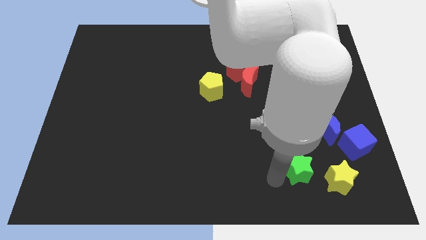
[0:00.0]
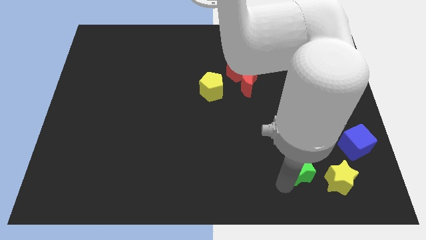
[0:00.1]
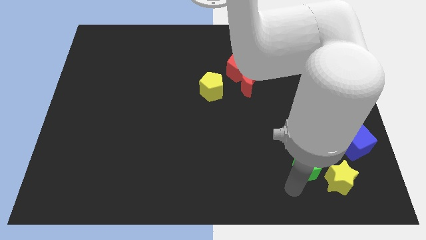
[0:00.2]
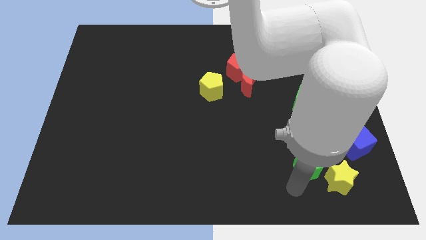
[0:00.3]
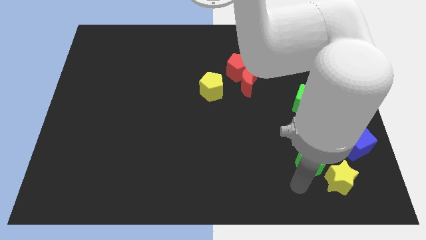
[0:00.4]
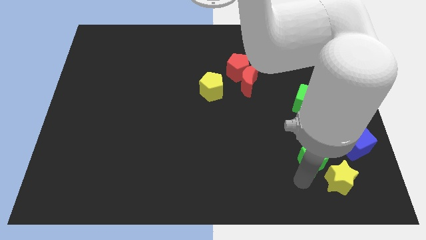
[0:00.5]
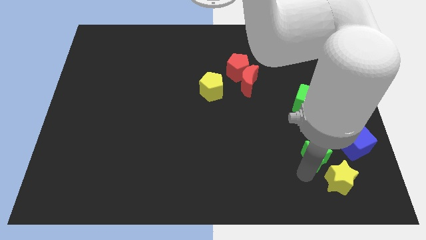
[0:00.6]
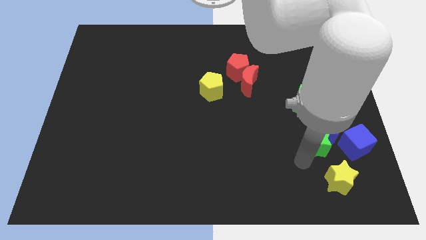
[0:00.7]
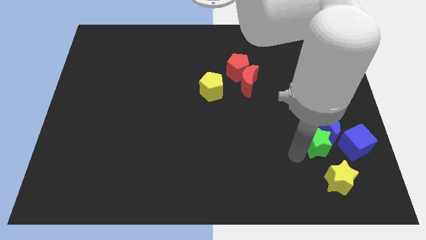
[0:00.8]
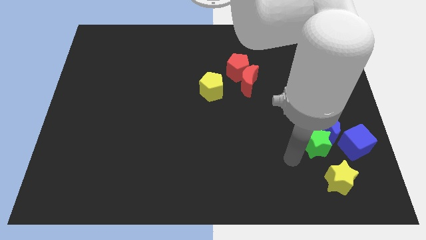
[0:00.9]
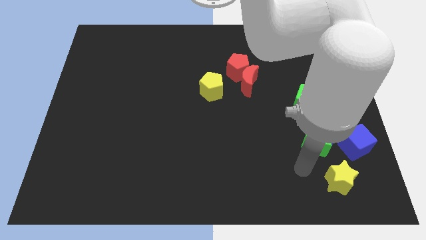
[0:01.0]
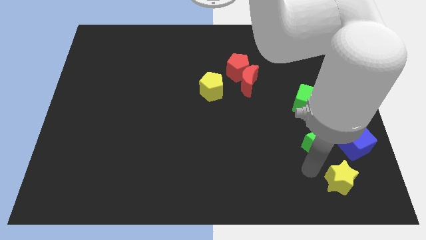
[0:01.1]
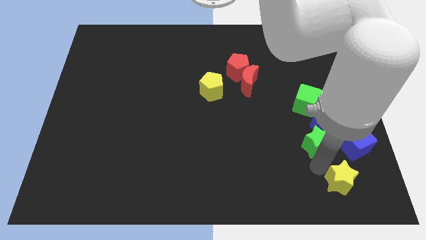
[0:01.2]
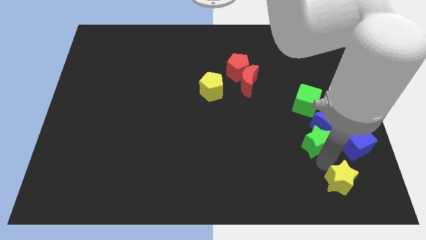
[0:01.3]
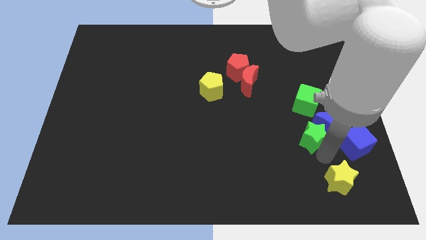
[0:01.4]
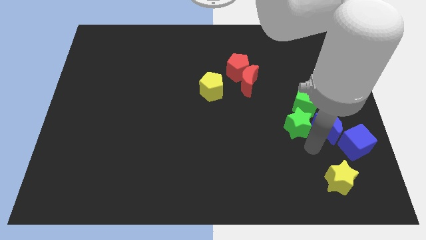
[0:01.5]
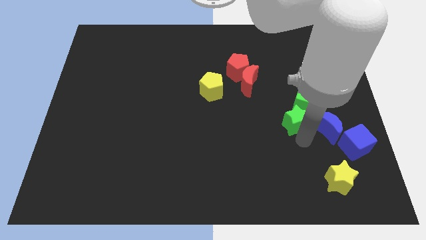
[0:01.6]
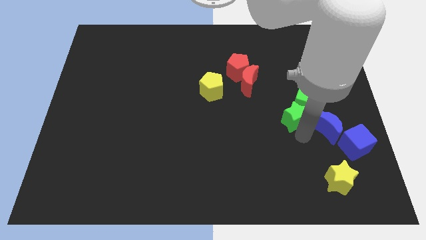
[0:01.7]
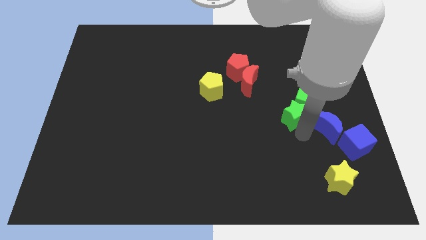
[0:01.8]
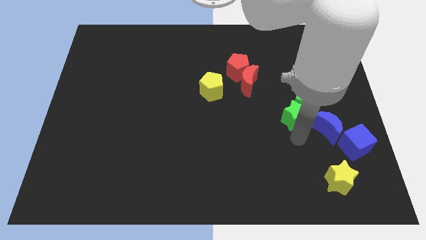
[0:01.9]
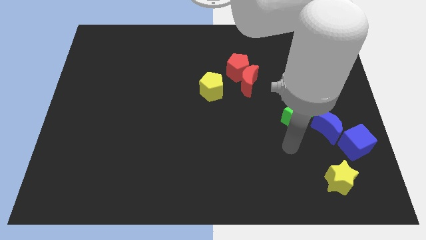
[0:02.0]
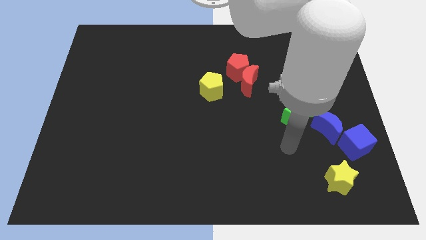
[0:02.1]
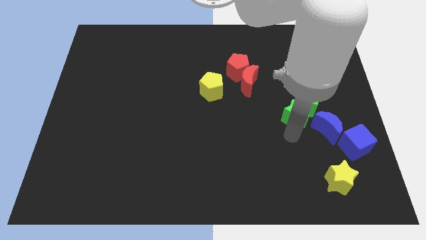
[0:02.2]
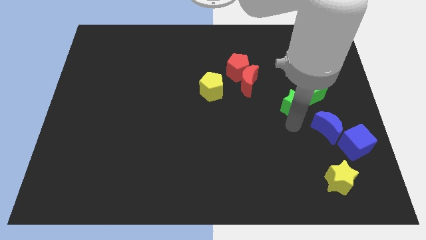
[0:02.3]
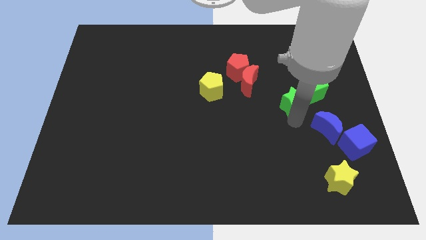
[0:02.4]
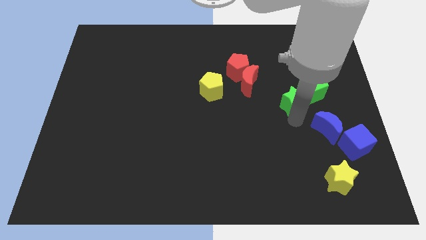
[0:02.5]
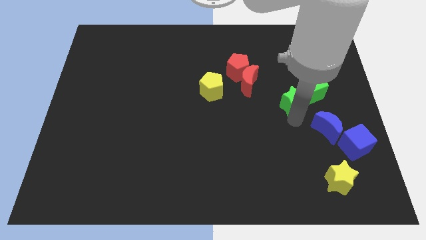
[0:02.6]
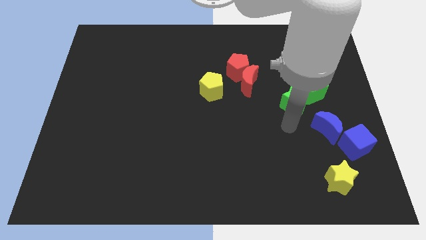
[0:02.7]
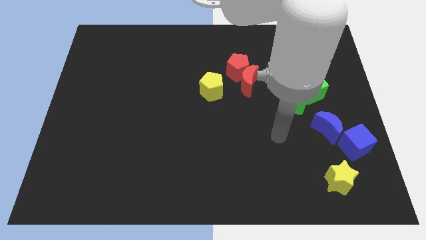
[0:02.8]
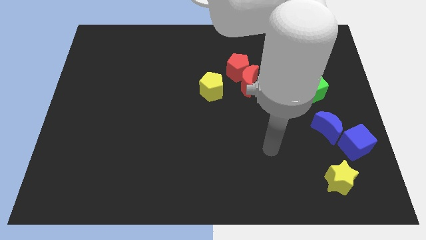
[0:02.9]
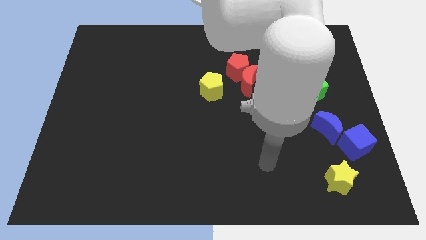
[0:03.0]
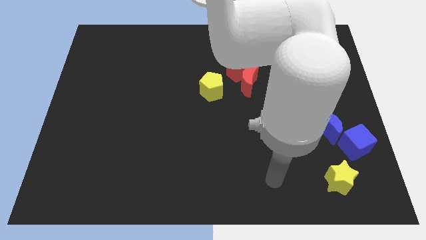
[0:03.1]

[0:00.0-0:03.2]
push green star into green cube

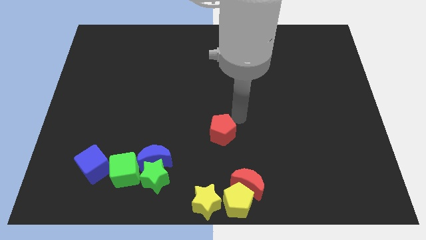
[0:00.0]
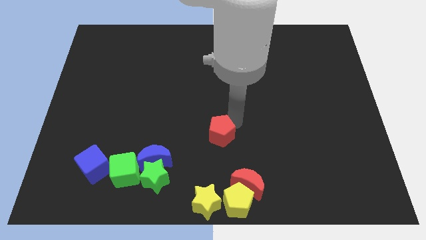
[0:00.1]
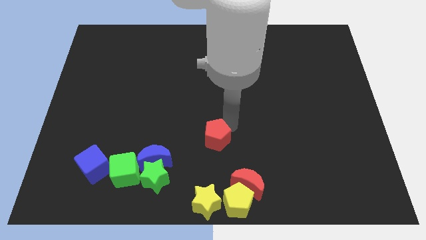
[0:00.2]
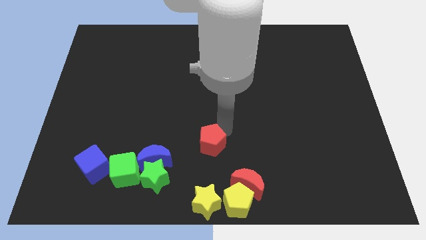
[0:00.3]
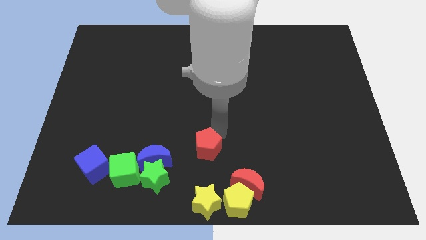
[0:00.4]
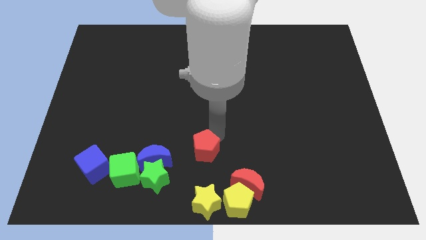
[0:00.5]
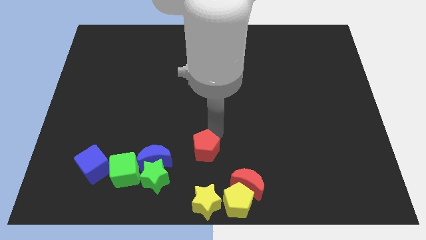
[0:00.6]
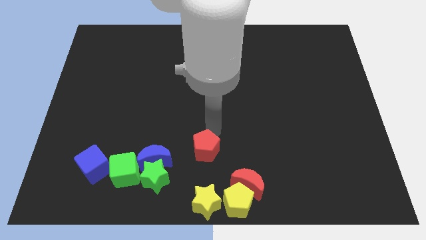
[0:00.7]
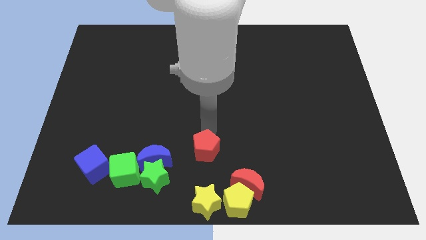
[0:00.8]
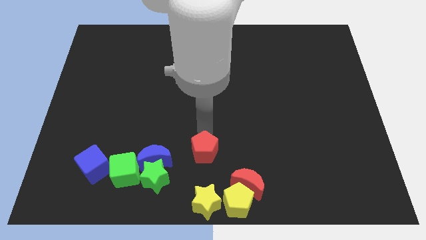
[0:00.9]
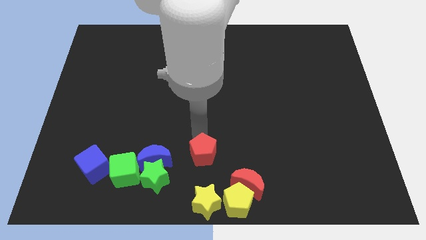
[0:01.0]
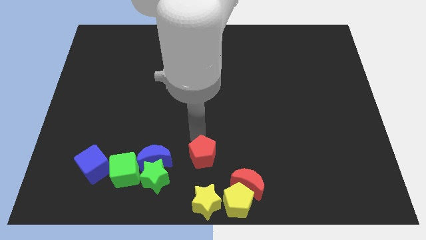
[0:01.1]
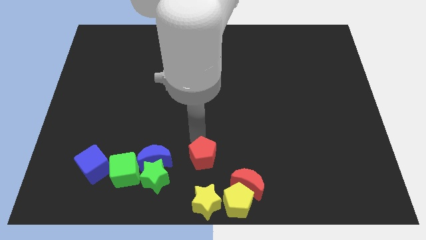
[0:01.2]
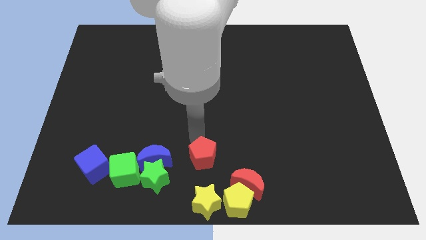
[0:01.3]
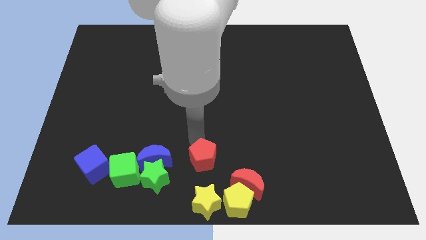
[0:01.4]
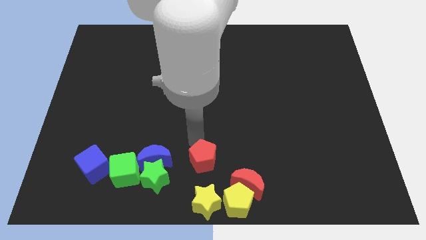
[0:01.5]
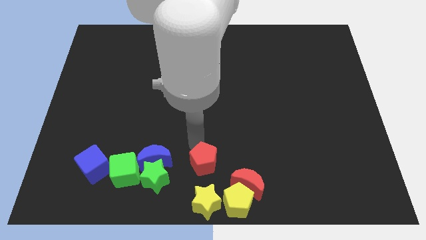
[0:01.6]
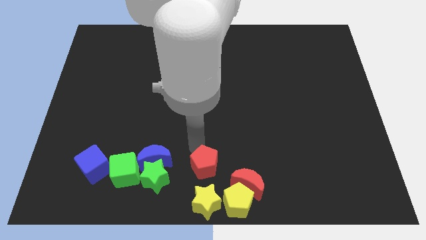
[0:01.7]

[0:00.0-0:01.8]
push the red pentagon at the right side of the blue crescent

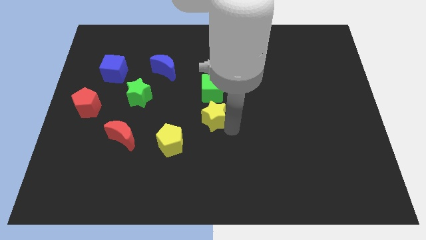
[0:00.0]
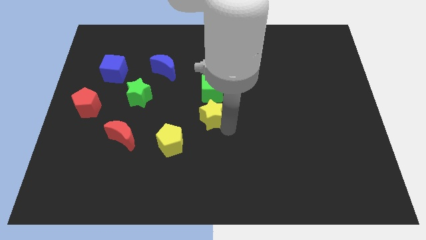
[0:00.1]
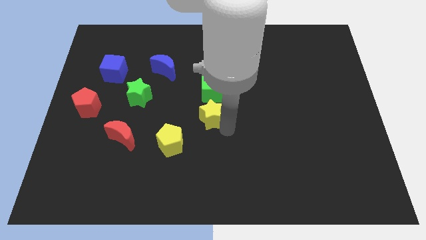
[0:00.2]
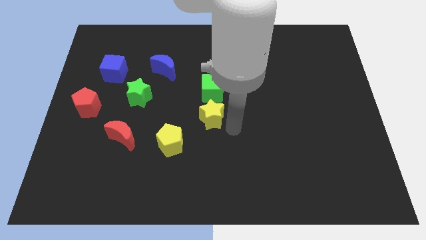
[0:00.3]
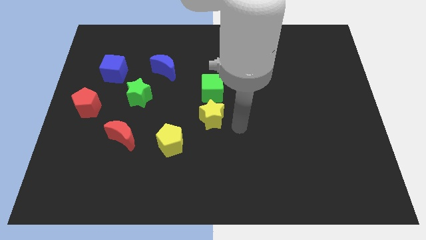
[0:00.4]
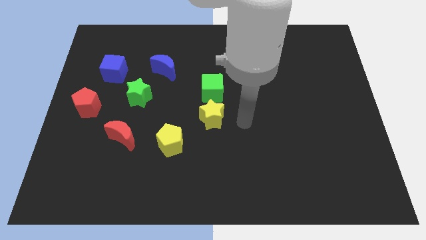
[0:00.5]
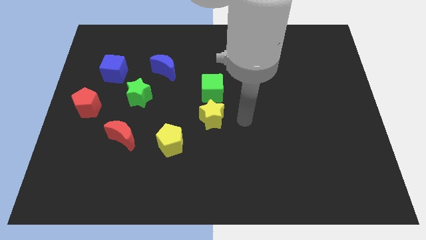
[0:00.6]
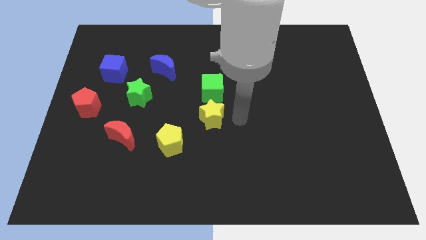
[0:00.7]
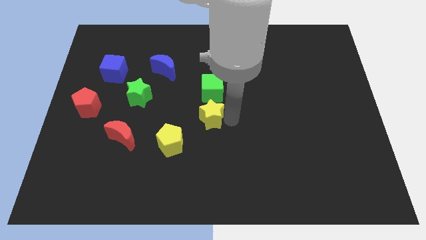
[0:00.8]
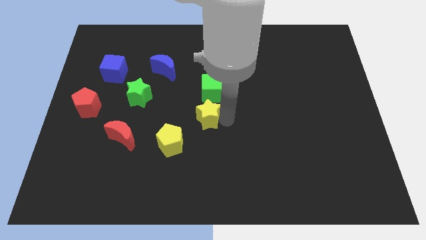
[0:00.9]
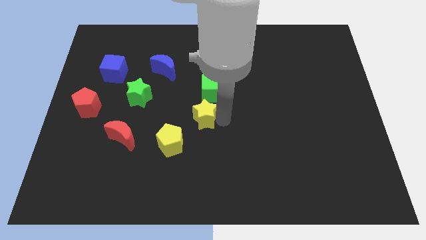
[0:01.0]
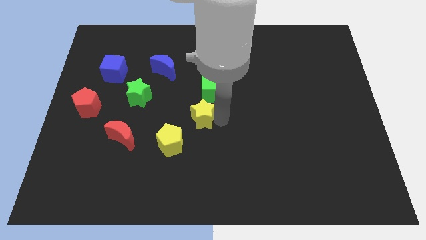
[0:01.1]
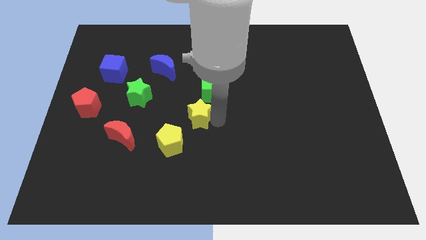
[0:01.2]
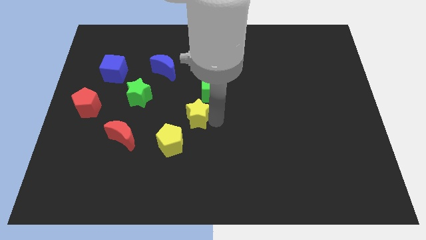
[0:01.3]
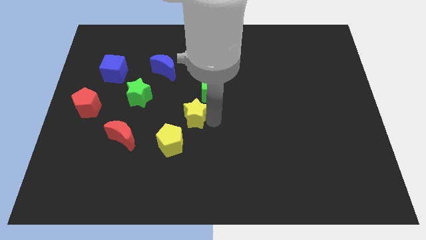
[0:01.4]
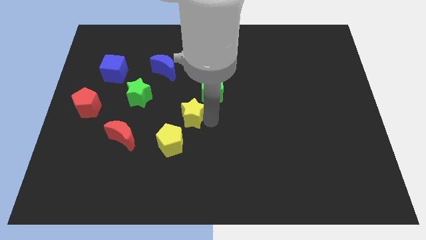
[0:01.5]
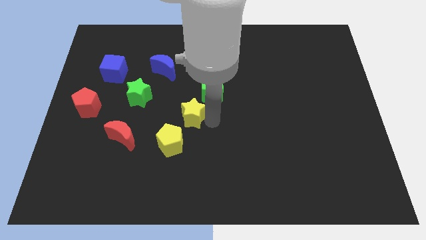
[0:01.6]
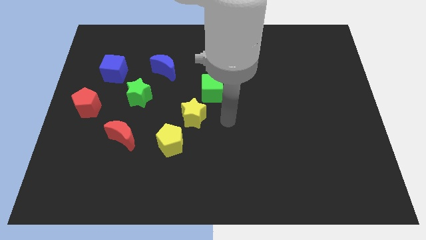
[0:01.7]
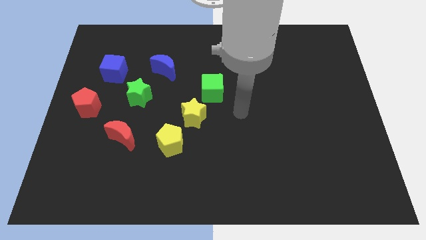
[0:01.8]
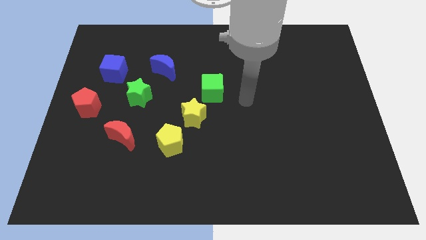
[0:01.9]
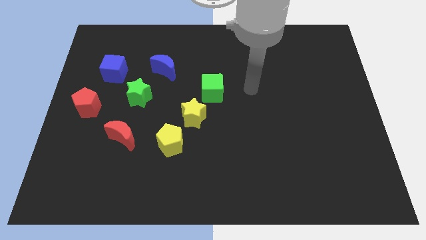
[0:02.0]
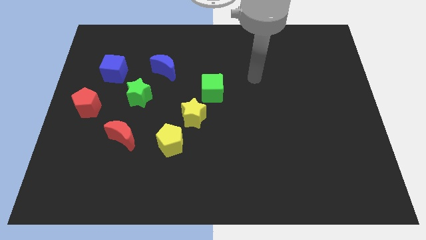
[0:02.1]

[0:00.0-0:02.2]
put the yellow star between the yellow pentagon and green cube

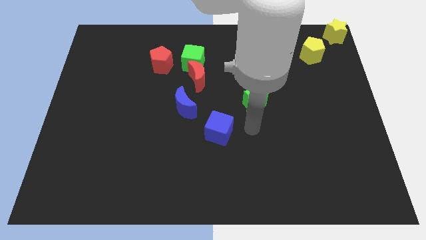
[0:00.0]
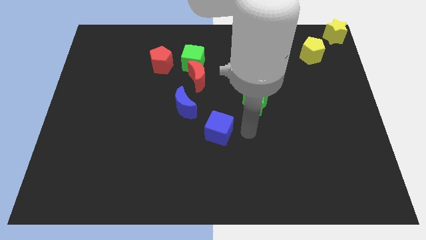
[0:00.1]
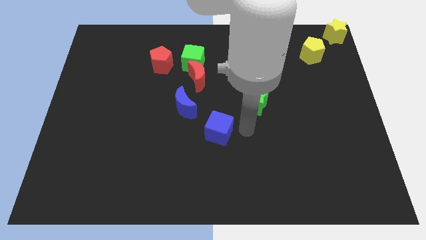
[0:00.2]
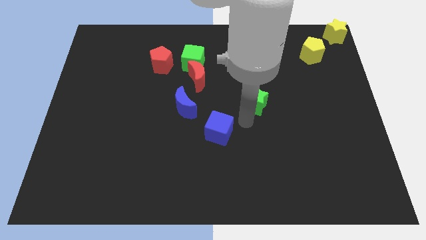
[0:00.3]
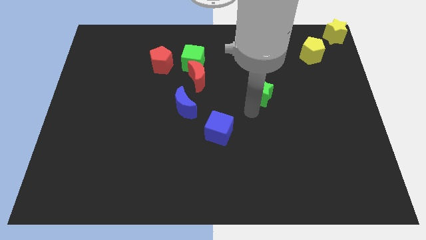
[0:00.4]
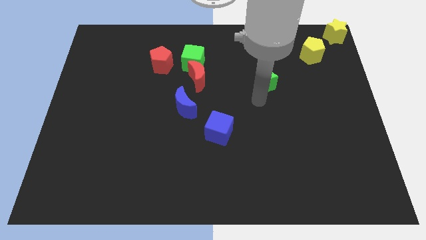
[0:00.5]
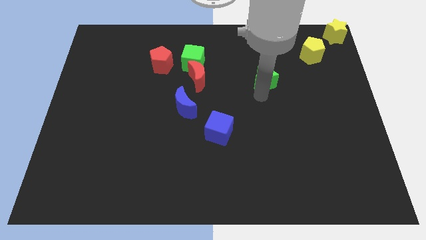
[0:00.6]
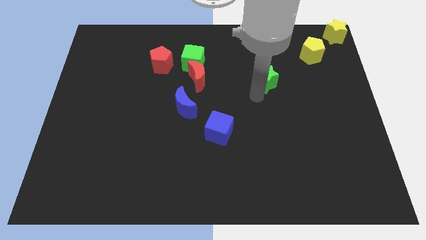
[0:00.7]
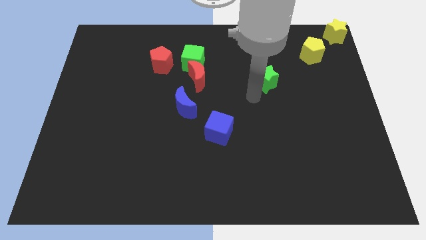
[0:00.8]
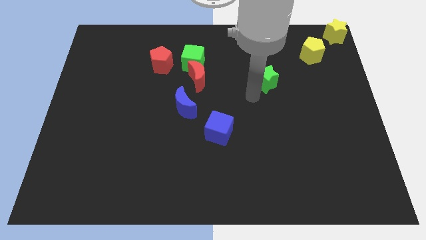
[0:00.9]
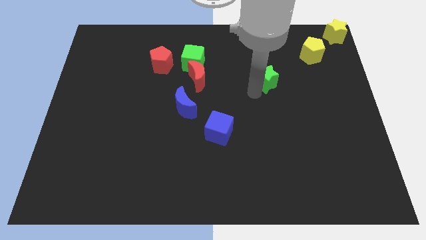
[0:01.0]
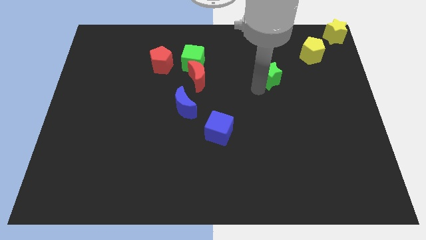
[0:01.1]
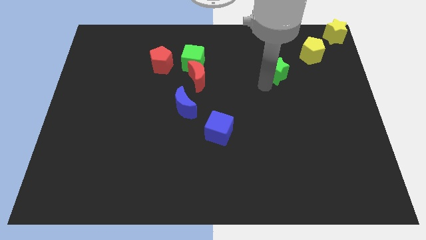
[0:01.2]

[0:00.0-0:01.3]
move the green star towards the yellow pentagon

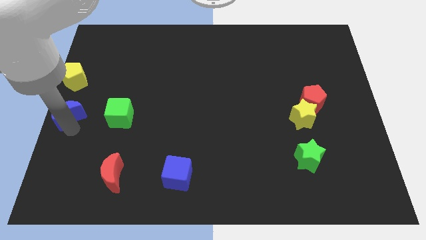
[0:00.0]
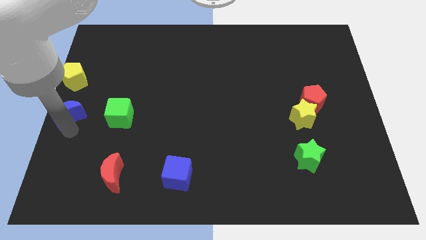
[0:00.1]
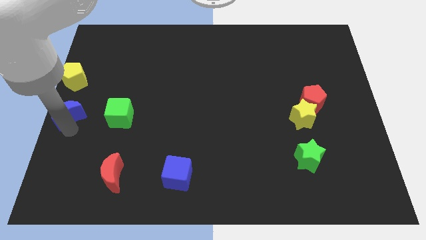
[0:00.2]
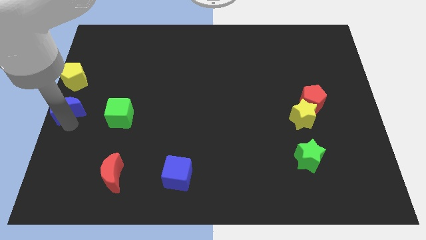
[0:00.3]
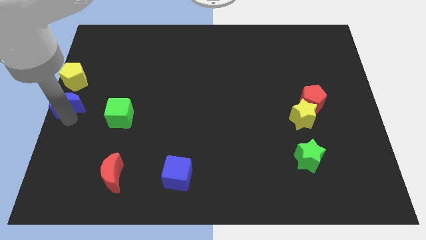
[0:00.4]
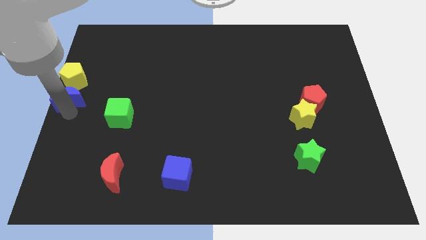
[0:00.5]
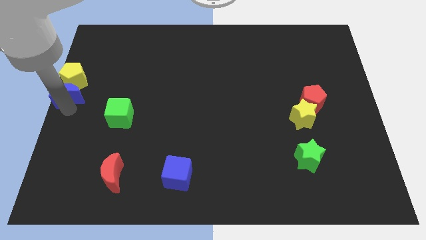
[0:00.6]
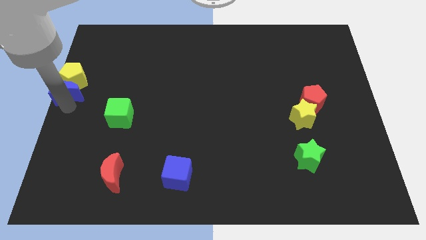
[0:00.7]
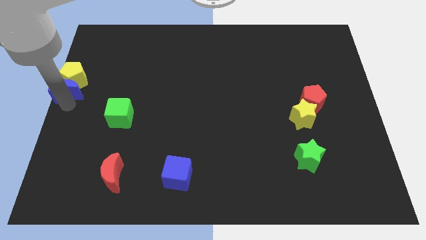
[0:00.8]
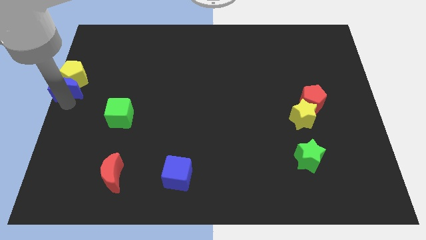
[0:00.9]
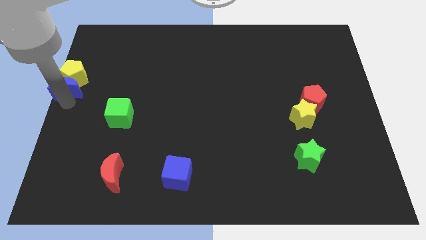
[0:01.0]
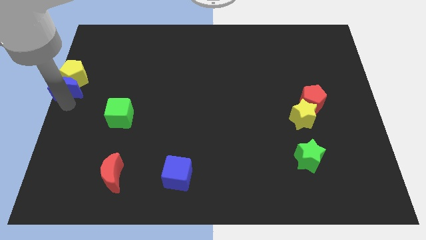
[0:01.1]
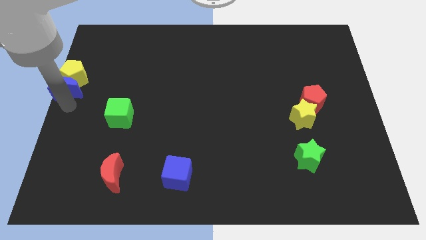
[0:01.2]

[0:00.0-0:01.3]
push the blue crescent into the yellow pentagon
